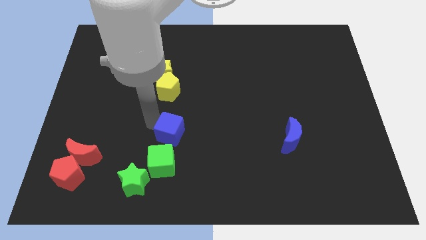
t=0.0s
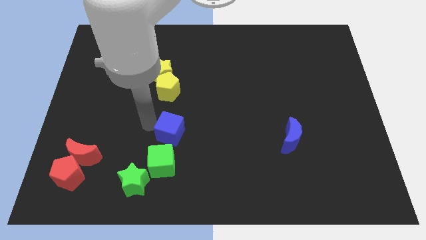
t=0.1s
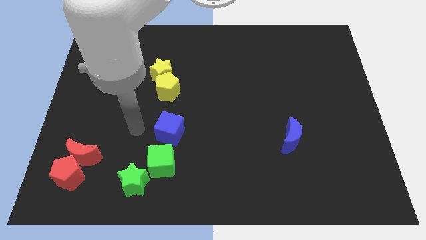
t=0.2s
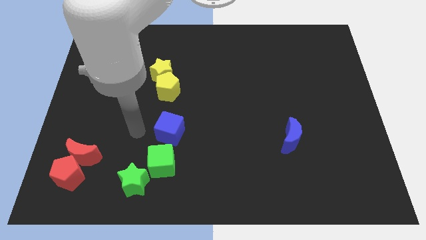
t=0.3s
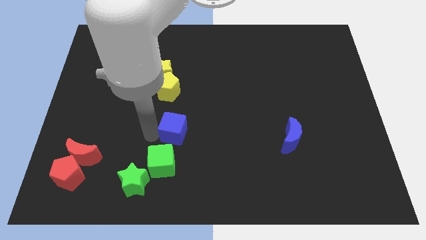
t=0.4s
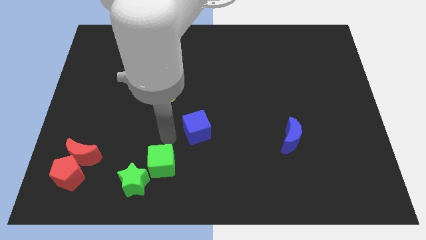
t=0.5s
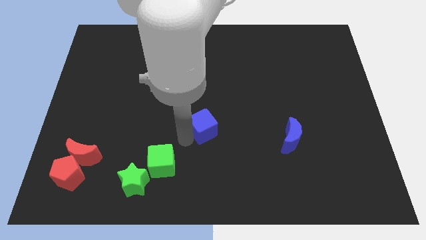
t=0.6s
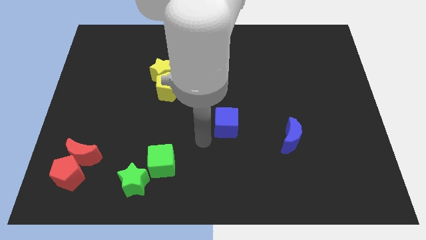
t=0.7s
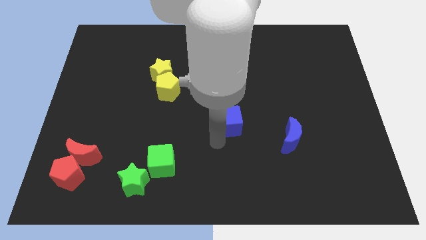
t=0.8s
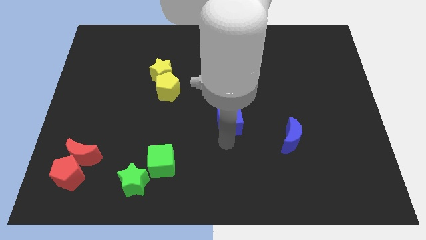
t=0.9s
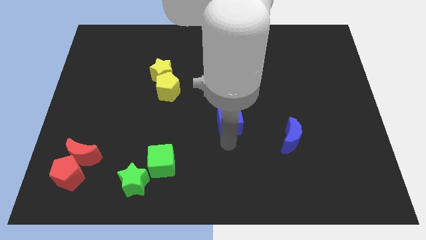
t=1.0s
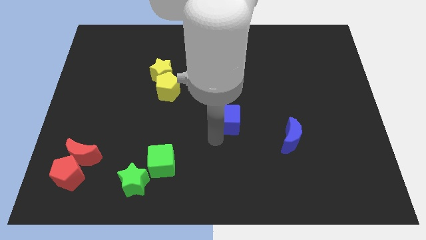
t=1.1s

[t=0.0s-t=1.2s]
slide the blue cube towards the blue moon

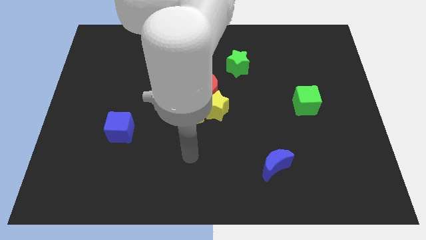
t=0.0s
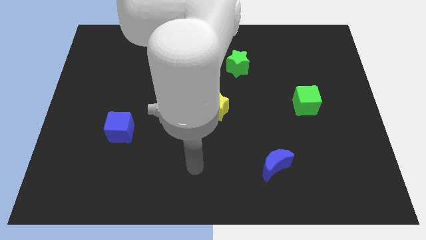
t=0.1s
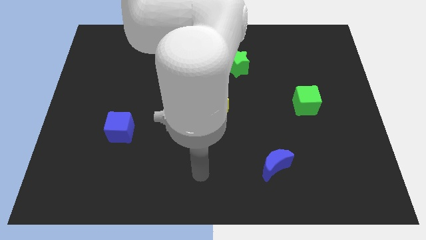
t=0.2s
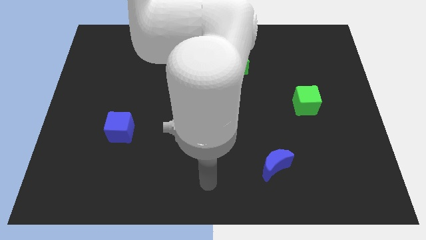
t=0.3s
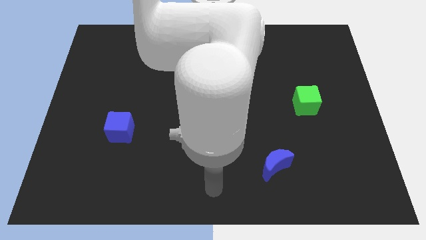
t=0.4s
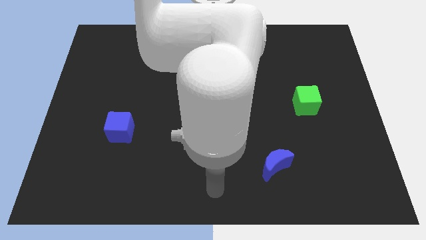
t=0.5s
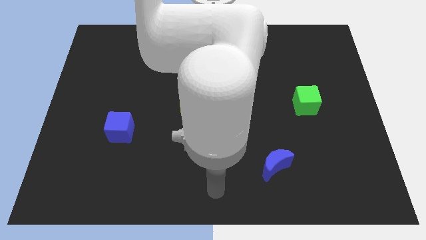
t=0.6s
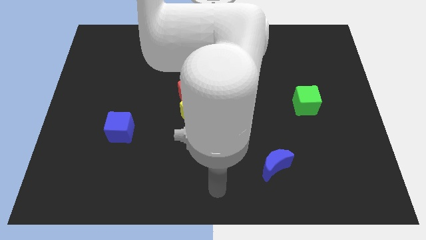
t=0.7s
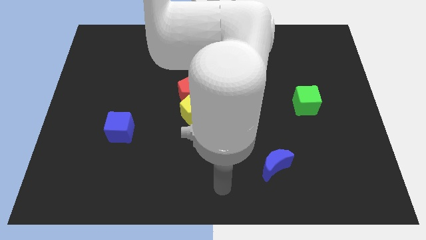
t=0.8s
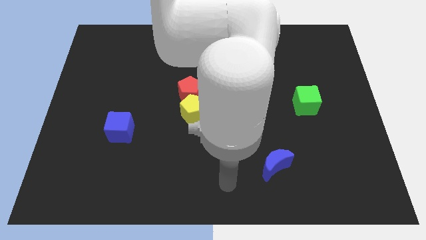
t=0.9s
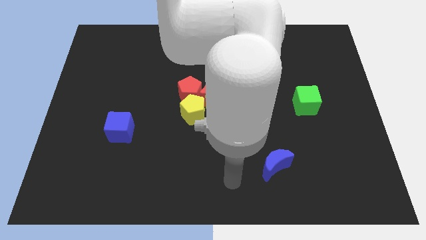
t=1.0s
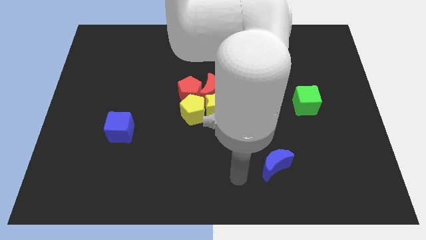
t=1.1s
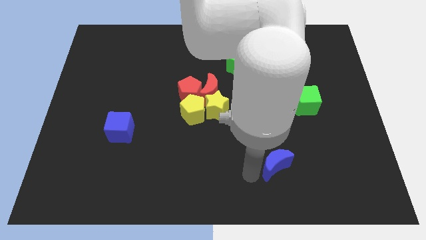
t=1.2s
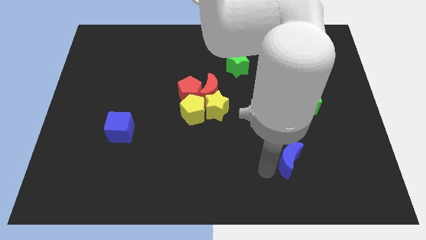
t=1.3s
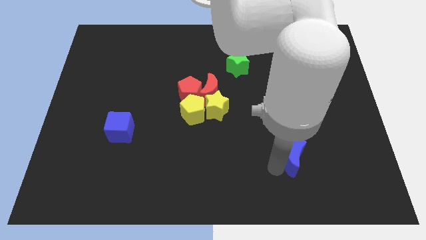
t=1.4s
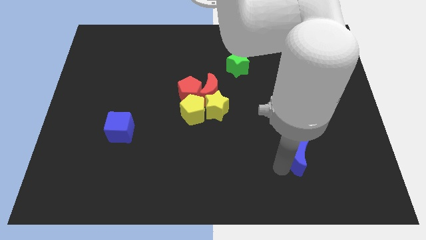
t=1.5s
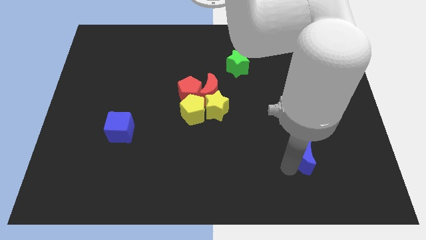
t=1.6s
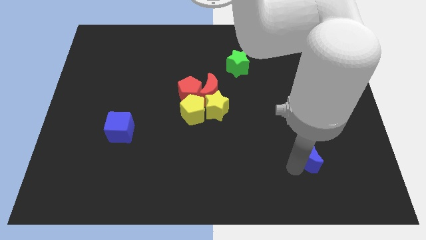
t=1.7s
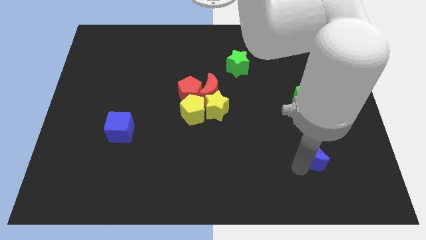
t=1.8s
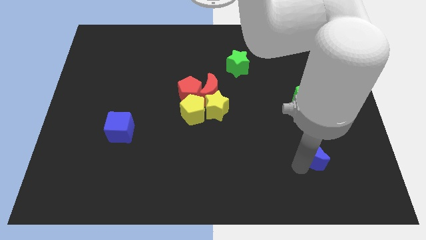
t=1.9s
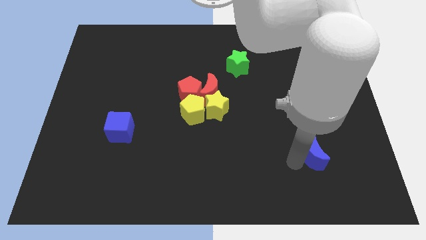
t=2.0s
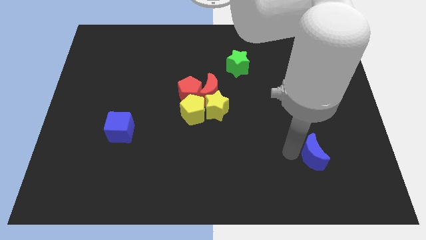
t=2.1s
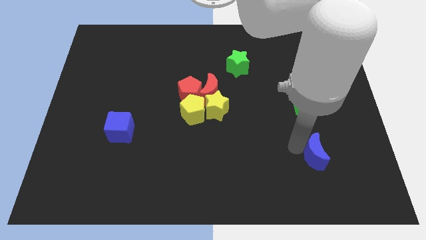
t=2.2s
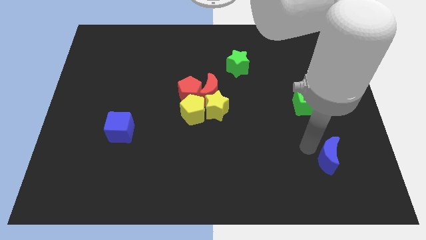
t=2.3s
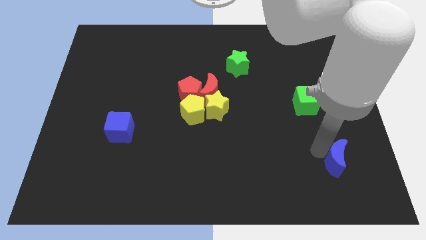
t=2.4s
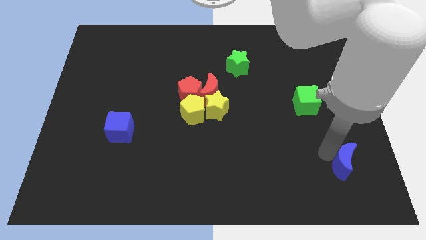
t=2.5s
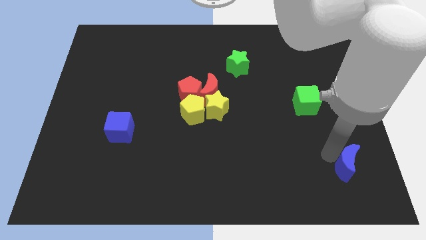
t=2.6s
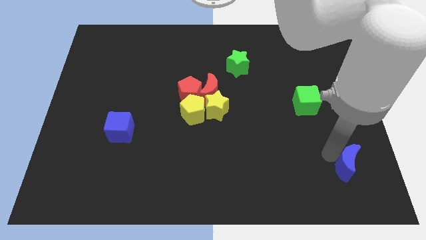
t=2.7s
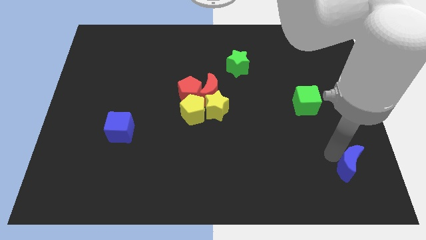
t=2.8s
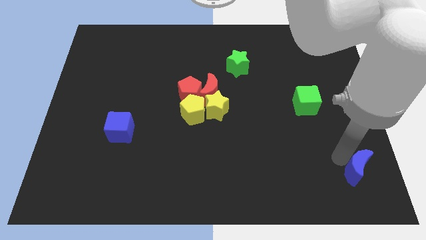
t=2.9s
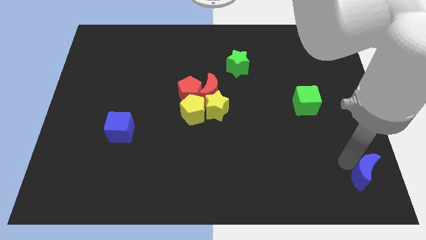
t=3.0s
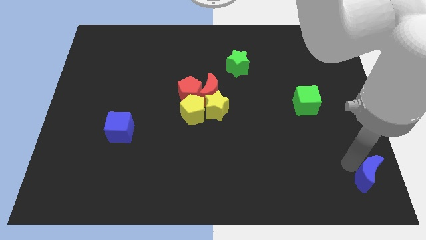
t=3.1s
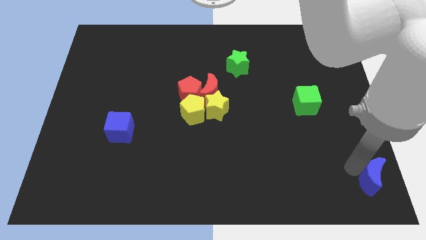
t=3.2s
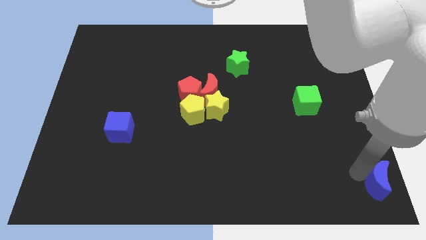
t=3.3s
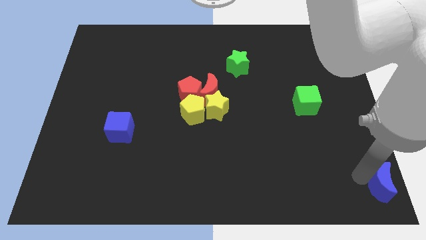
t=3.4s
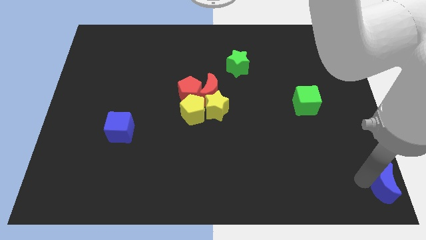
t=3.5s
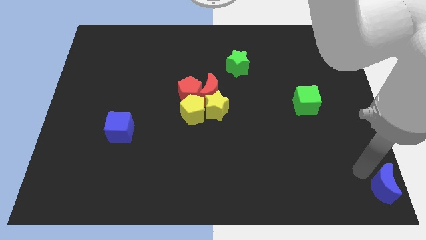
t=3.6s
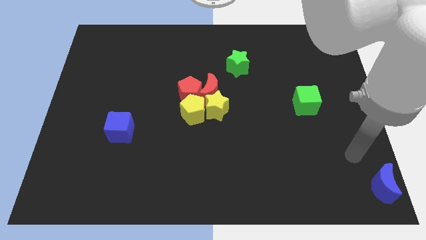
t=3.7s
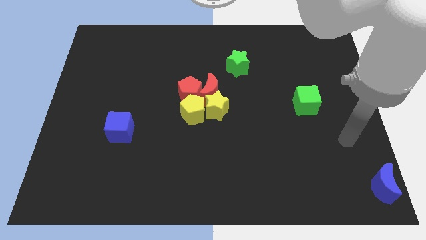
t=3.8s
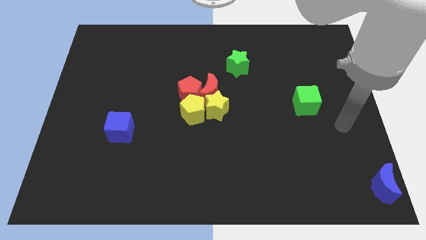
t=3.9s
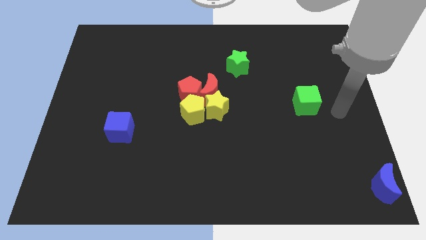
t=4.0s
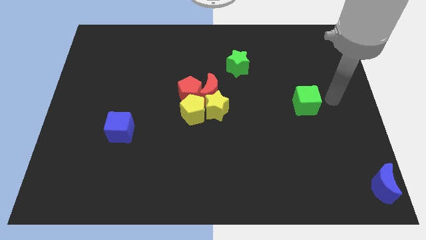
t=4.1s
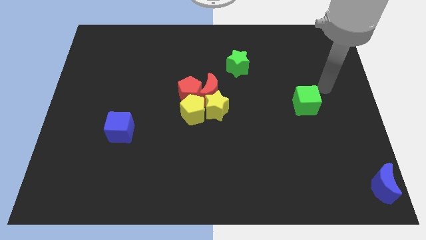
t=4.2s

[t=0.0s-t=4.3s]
move the blue crescent towards the bottom right corner of the board

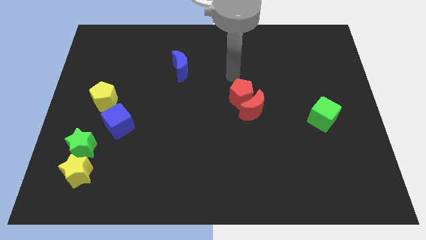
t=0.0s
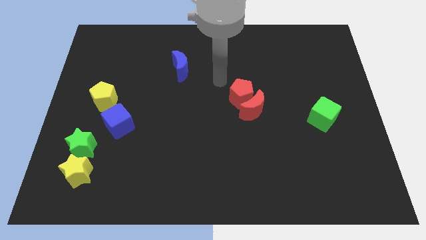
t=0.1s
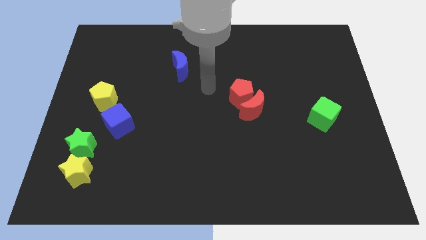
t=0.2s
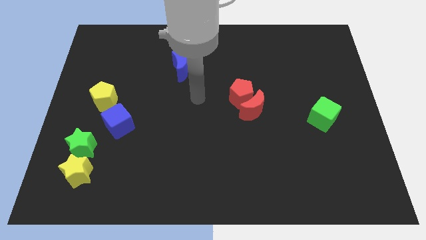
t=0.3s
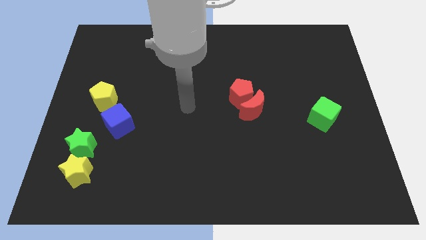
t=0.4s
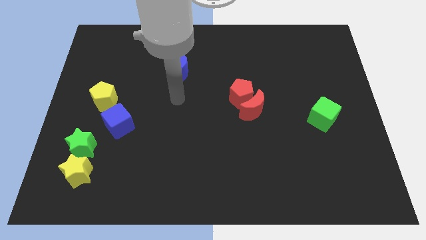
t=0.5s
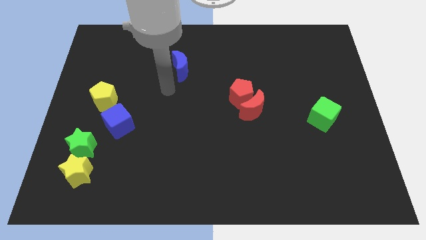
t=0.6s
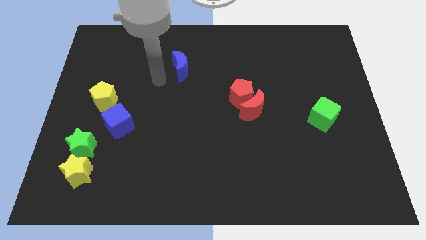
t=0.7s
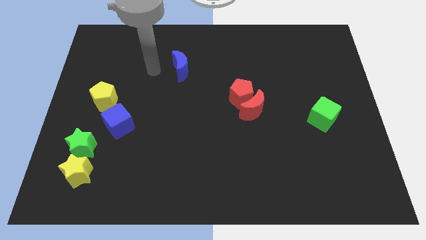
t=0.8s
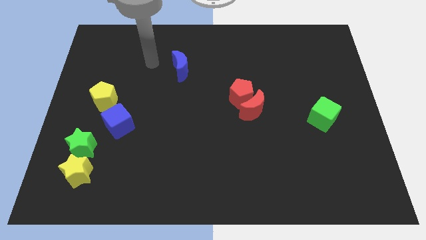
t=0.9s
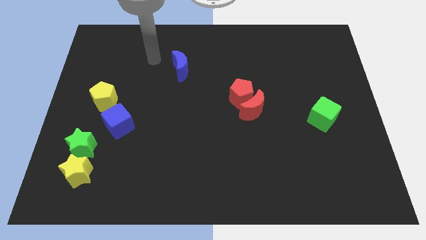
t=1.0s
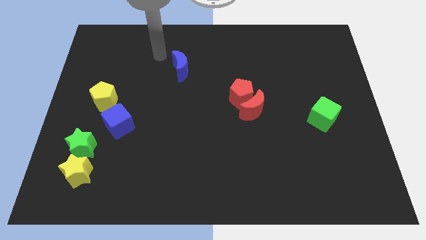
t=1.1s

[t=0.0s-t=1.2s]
point your arm at the left of the blue crescent

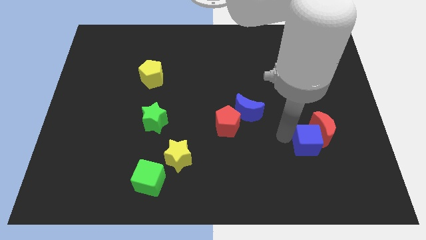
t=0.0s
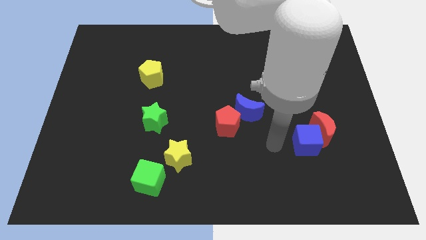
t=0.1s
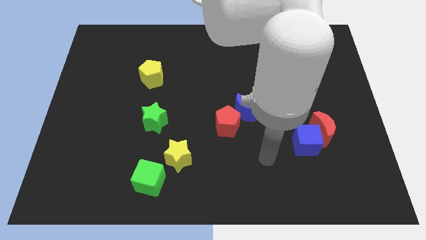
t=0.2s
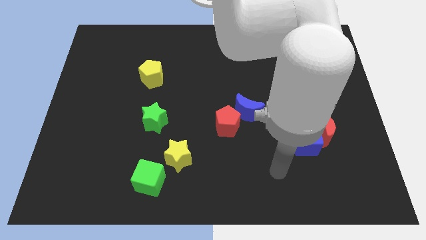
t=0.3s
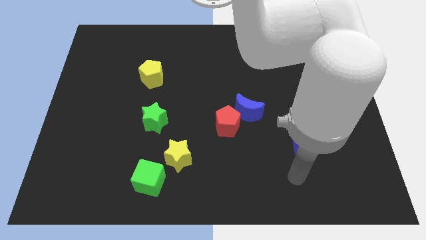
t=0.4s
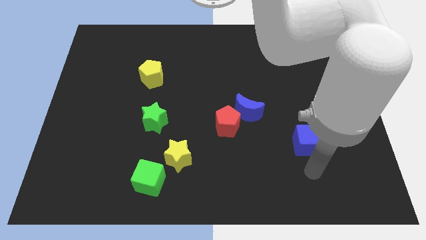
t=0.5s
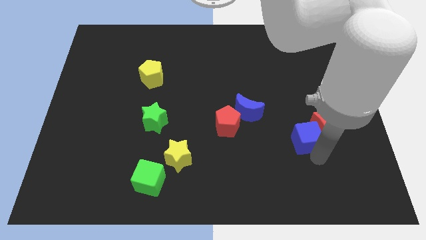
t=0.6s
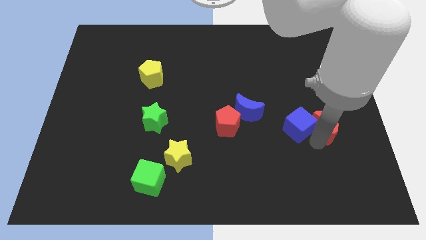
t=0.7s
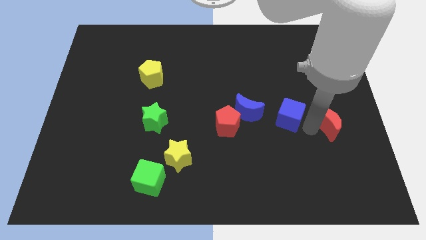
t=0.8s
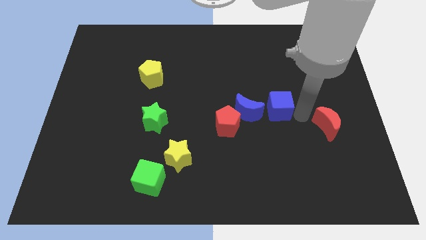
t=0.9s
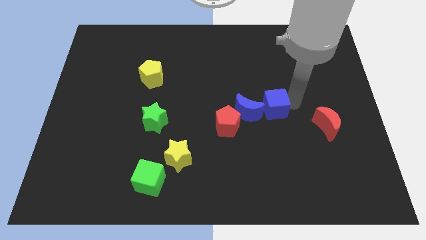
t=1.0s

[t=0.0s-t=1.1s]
separate blue cube from red moon

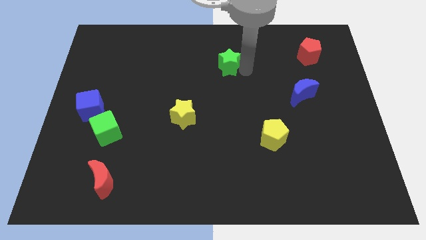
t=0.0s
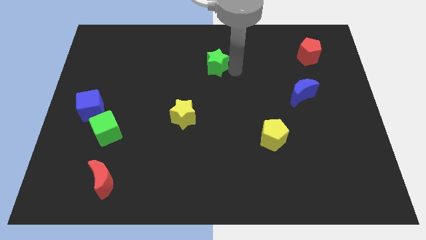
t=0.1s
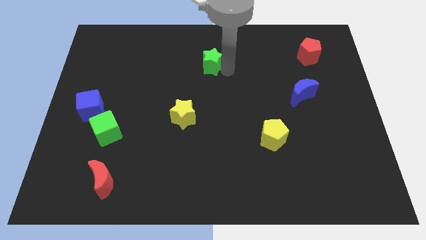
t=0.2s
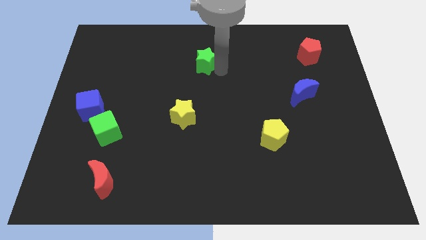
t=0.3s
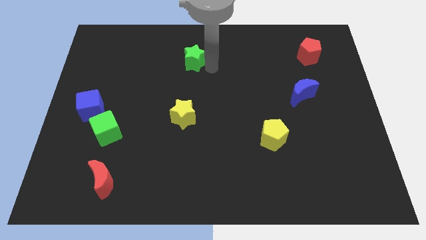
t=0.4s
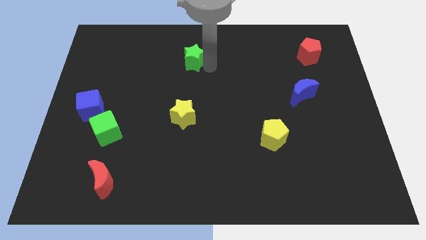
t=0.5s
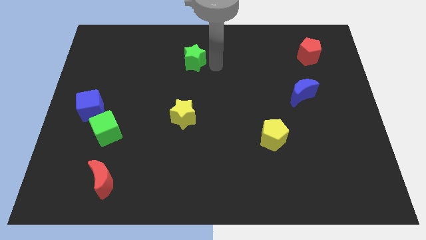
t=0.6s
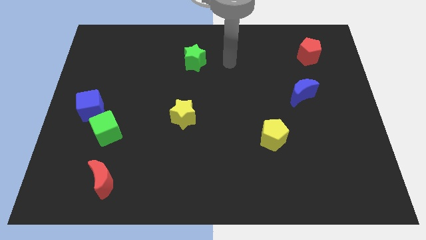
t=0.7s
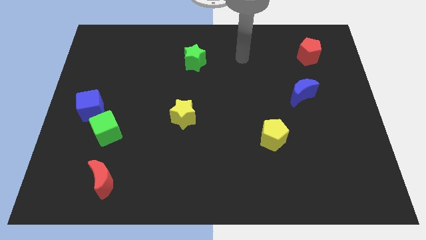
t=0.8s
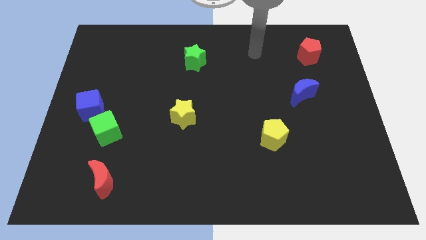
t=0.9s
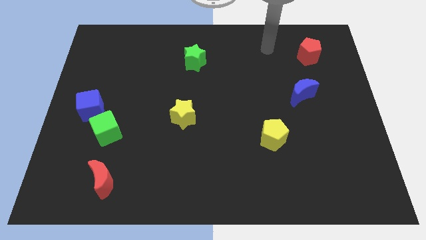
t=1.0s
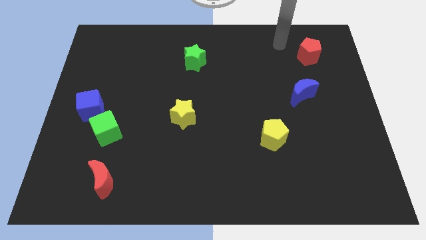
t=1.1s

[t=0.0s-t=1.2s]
push the green star to the left of the board
